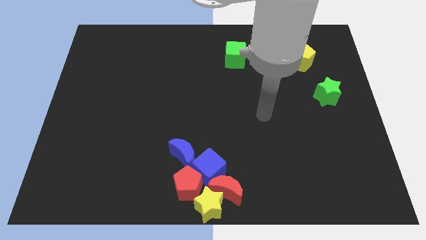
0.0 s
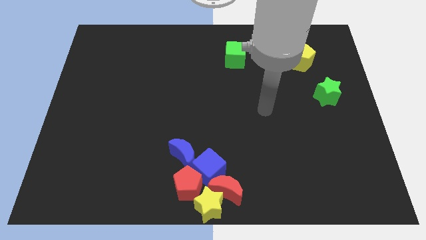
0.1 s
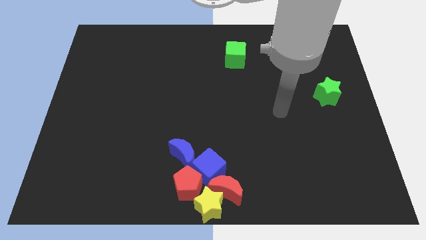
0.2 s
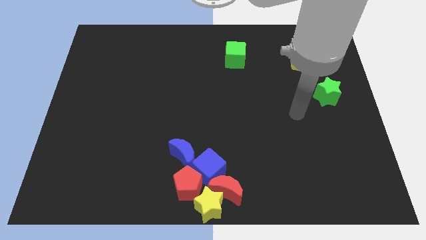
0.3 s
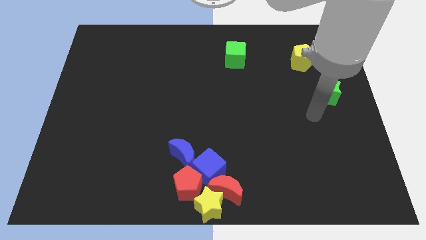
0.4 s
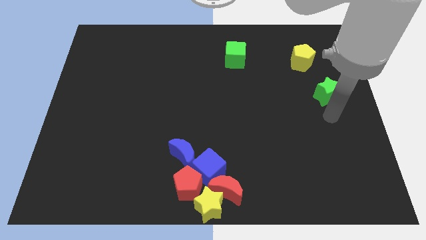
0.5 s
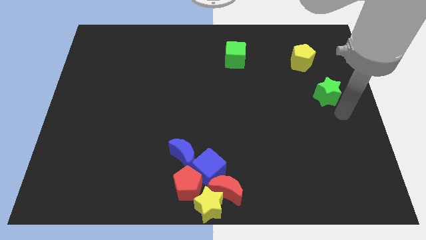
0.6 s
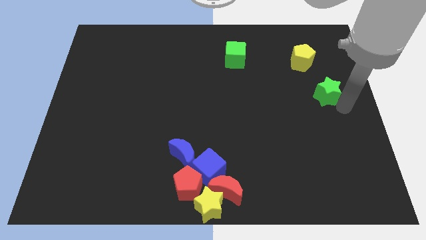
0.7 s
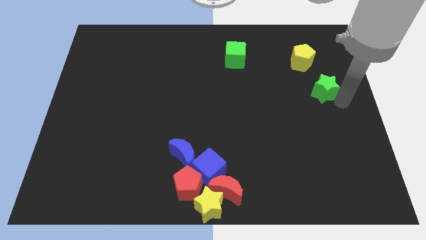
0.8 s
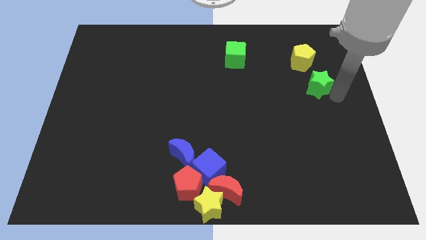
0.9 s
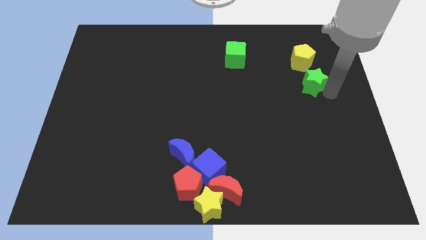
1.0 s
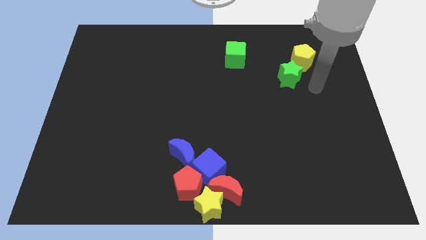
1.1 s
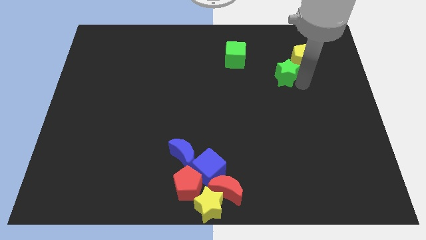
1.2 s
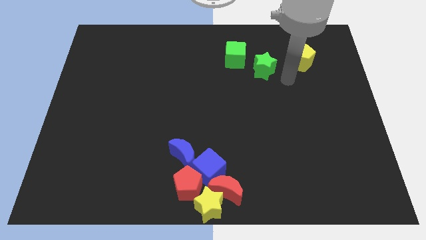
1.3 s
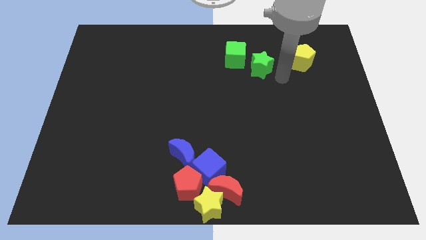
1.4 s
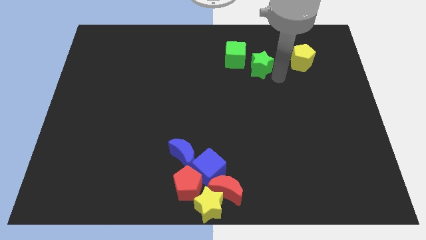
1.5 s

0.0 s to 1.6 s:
push the green star to the bottom right of the green cube

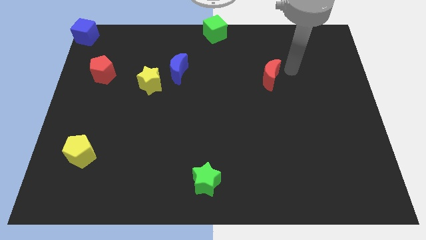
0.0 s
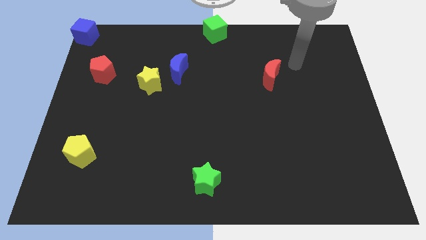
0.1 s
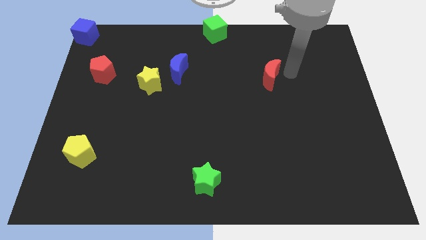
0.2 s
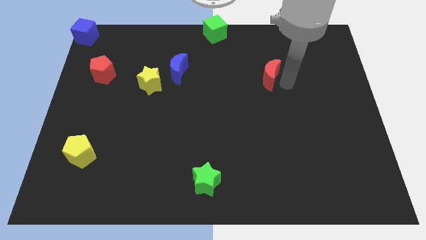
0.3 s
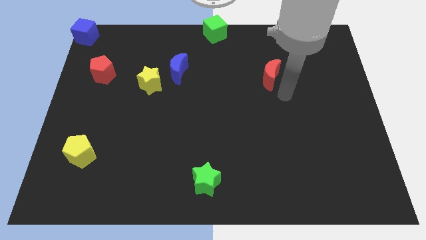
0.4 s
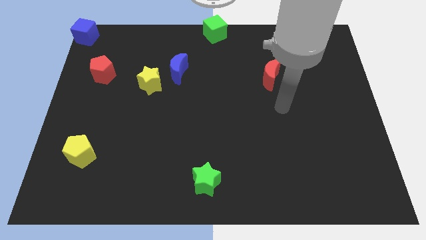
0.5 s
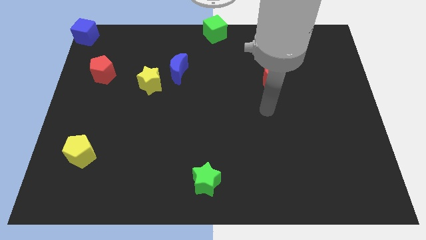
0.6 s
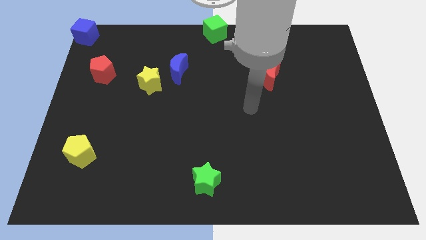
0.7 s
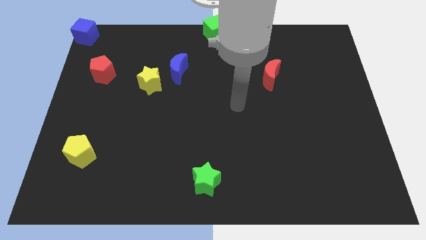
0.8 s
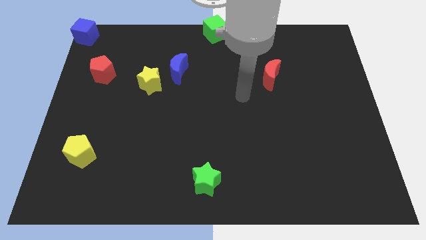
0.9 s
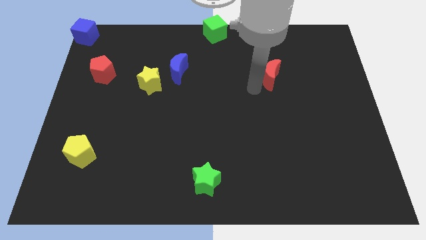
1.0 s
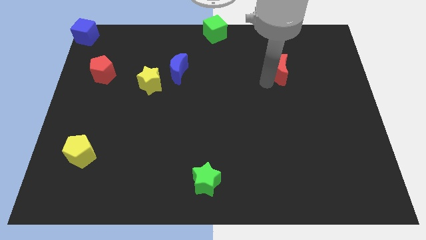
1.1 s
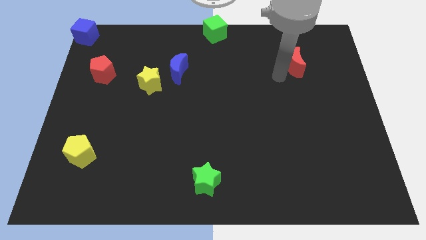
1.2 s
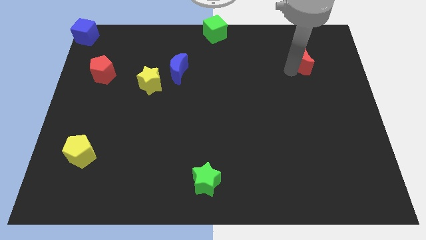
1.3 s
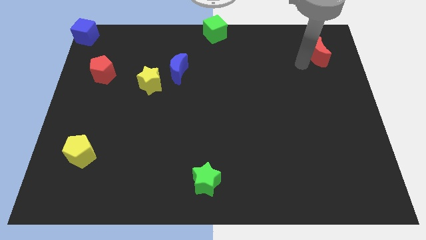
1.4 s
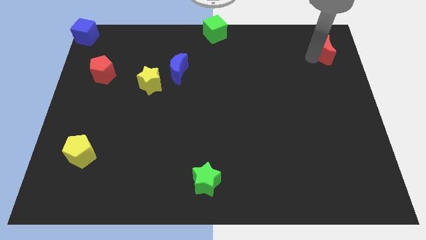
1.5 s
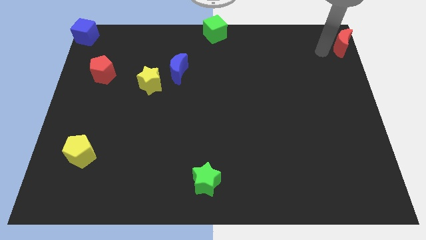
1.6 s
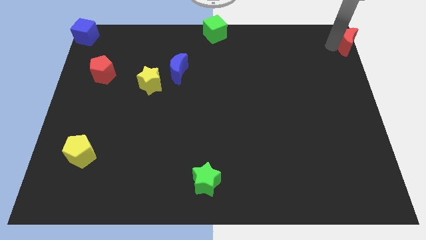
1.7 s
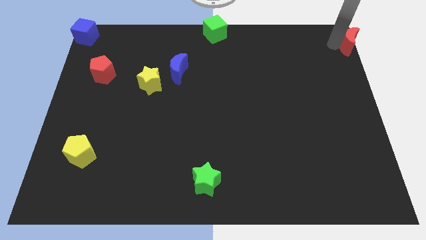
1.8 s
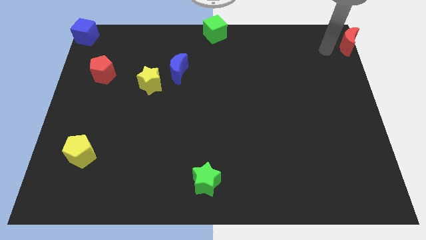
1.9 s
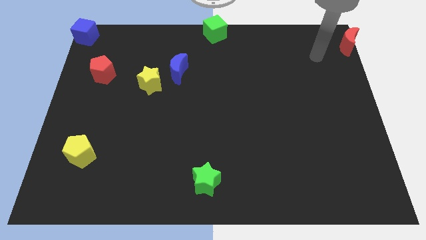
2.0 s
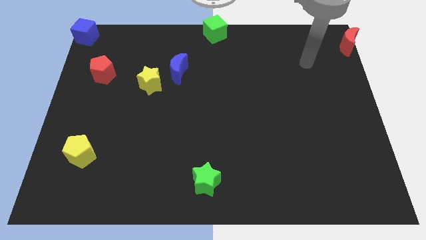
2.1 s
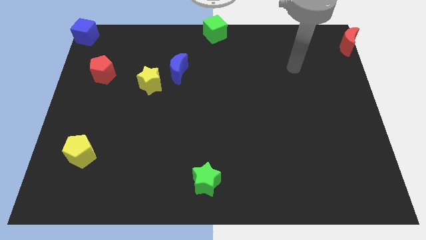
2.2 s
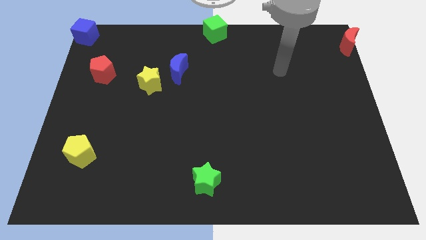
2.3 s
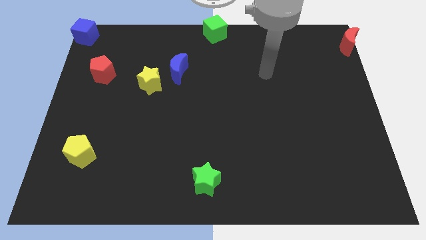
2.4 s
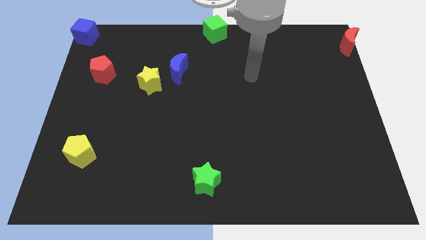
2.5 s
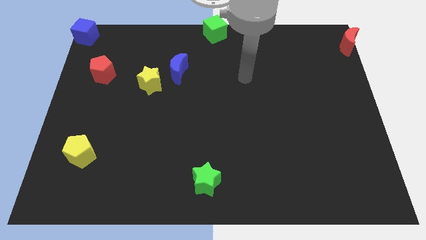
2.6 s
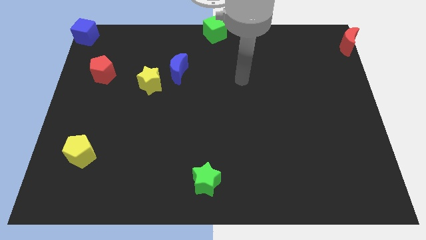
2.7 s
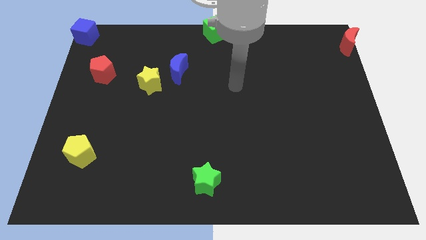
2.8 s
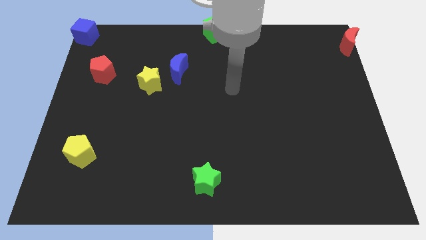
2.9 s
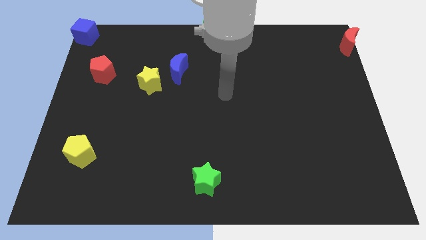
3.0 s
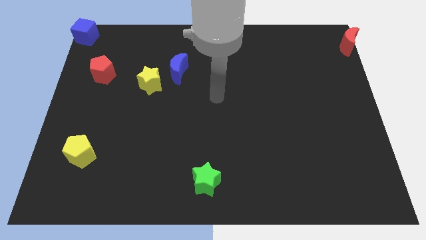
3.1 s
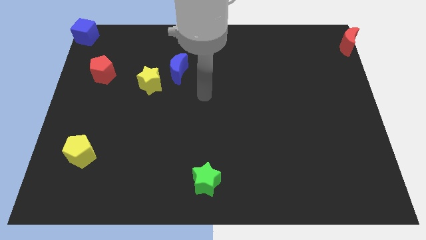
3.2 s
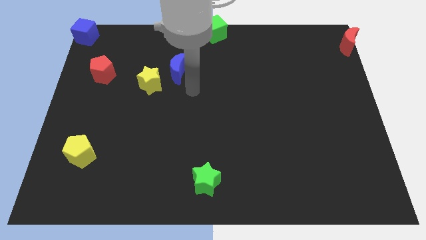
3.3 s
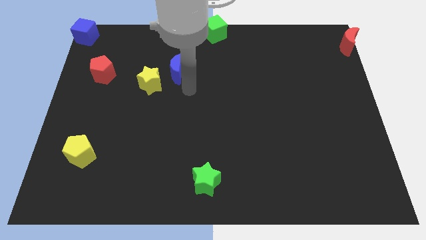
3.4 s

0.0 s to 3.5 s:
push the red moon towards the right side of the board

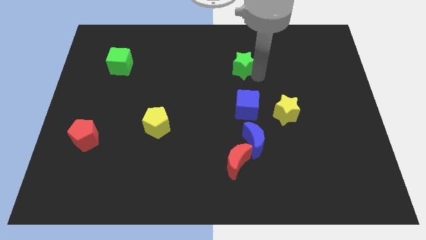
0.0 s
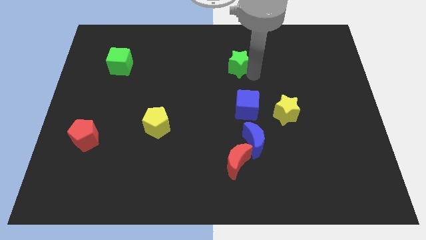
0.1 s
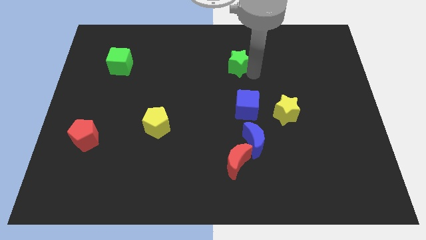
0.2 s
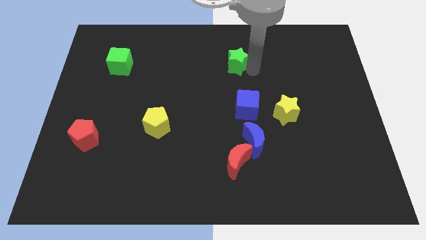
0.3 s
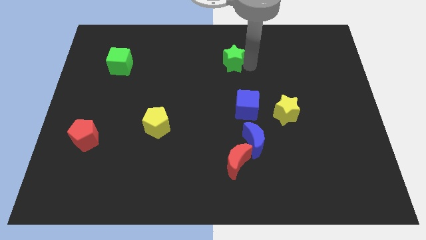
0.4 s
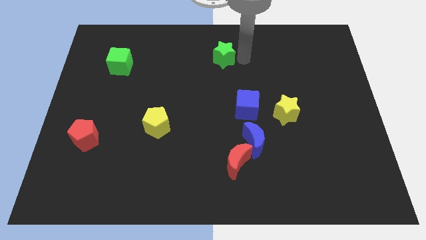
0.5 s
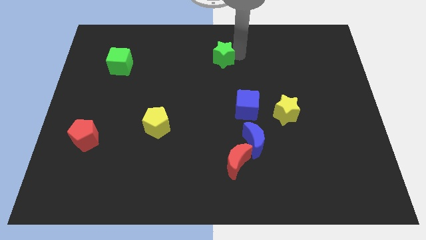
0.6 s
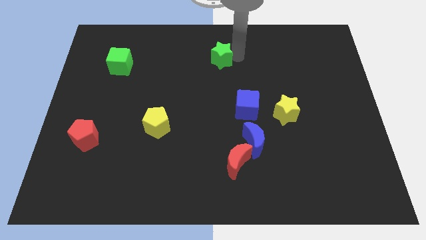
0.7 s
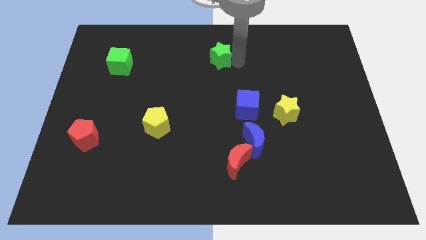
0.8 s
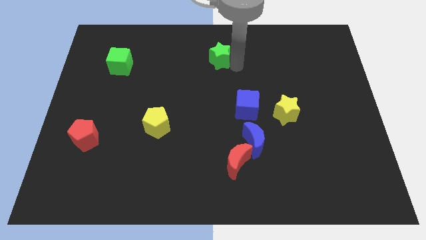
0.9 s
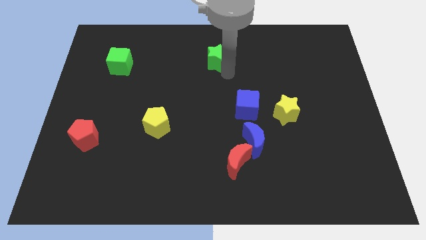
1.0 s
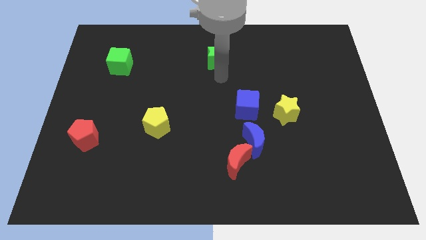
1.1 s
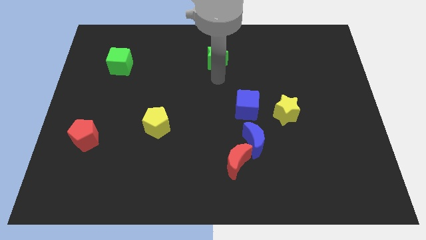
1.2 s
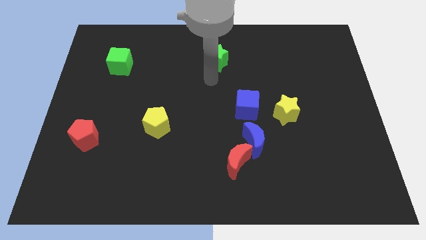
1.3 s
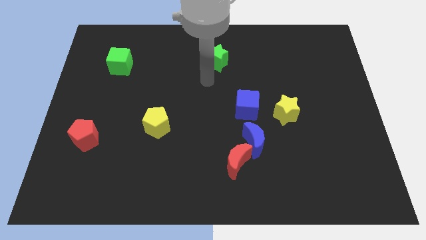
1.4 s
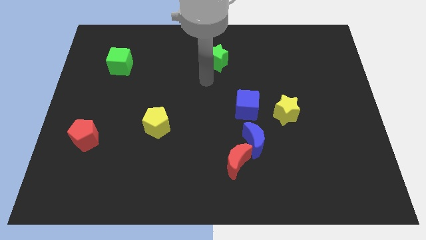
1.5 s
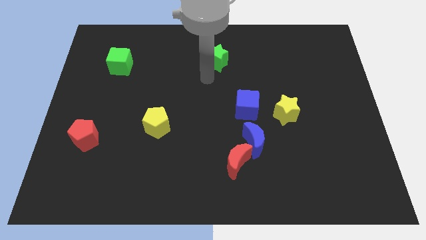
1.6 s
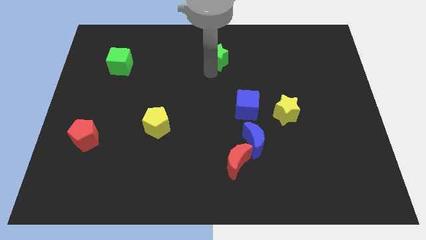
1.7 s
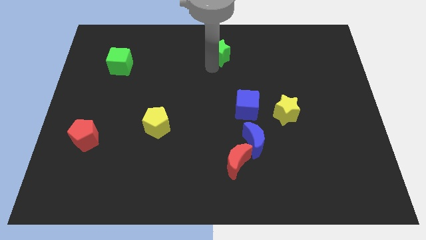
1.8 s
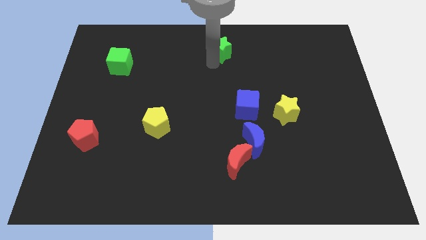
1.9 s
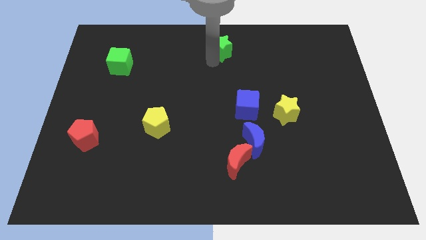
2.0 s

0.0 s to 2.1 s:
move green star towards top center

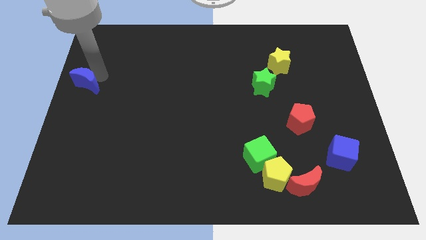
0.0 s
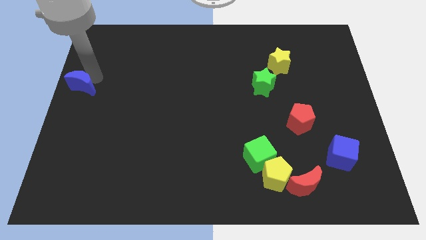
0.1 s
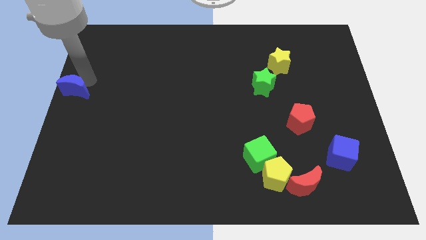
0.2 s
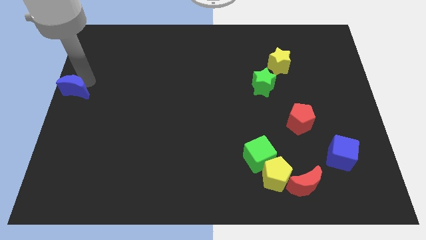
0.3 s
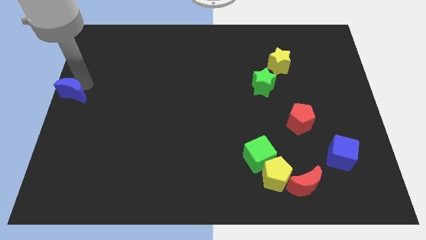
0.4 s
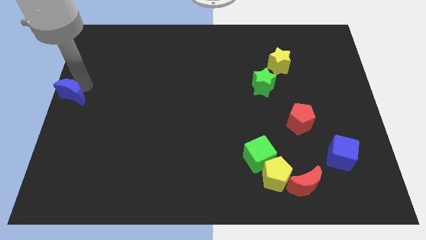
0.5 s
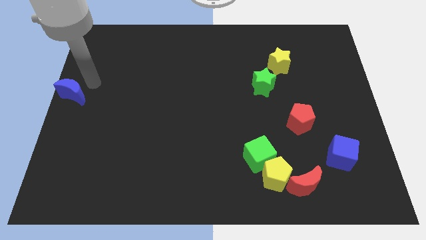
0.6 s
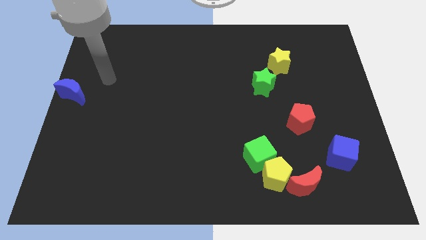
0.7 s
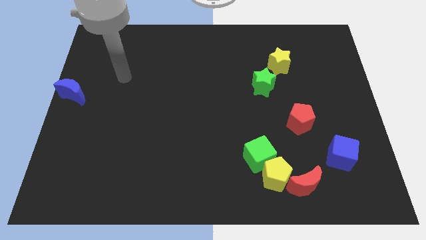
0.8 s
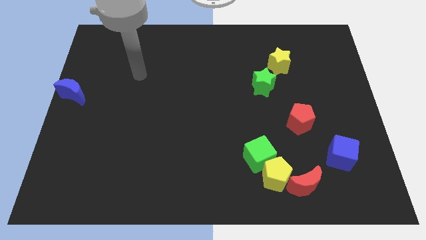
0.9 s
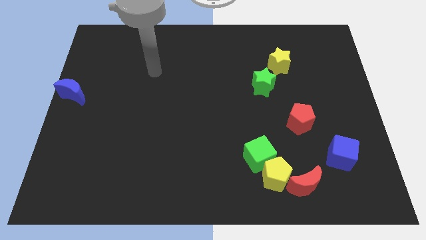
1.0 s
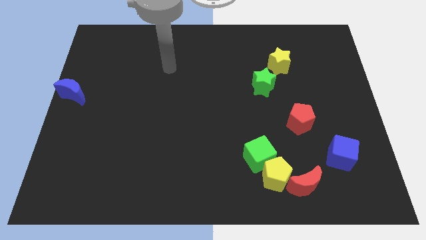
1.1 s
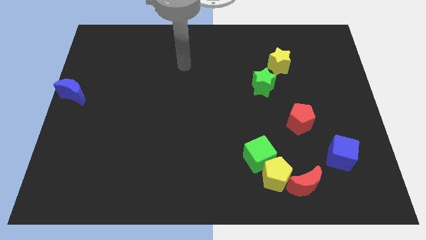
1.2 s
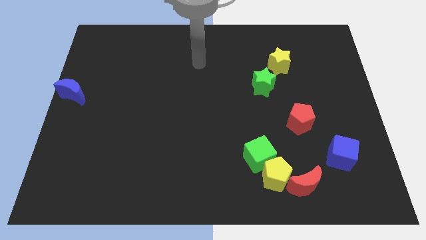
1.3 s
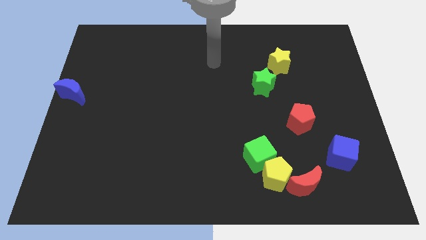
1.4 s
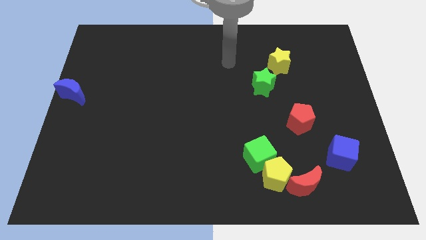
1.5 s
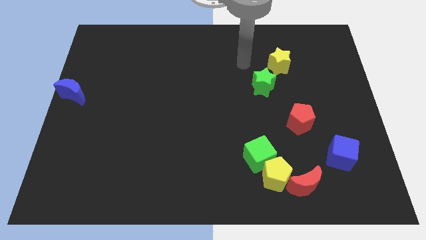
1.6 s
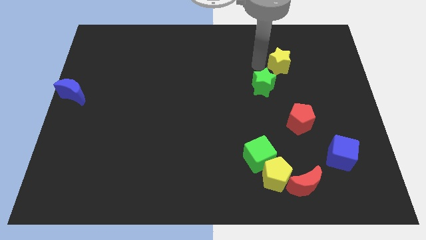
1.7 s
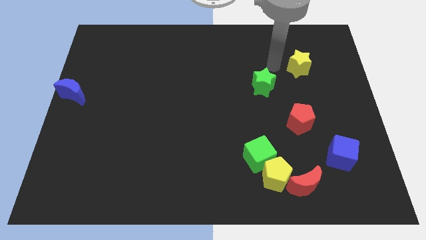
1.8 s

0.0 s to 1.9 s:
drag the blue moon to center left of the board
